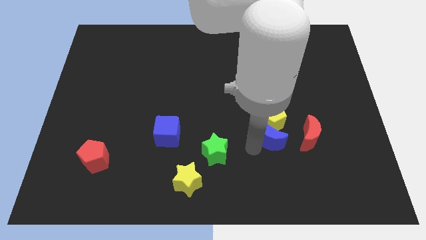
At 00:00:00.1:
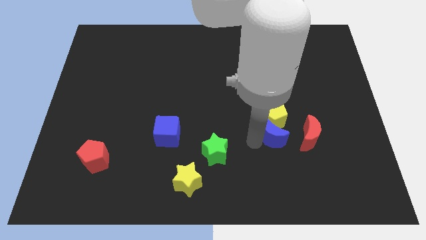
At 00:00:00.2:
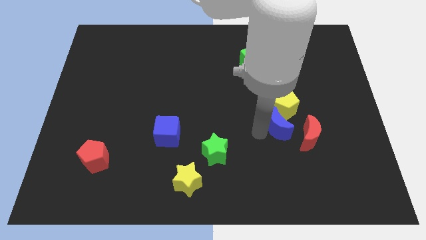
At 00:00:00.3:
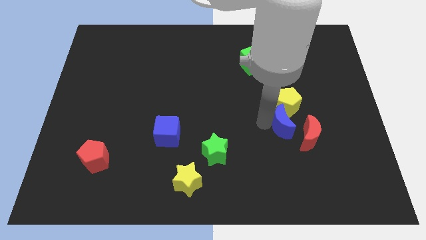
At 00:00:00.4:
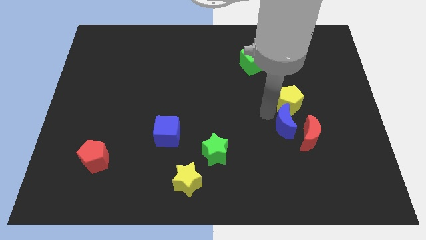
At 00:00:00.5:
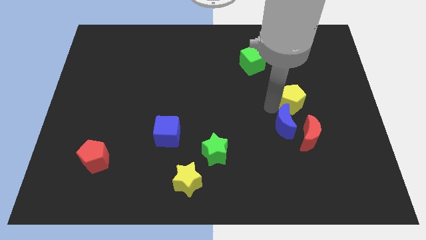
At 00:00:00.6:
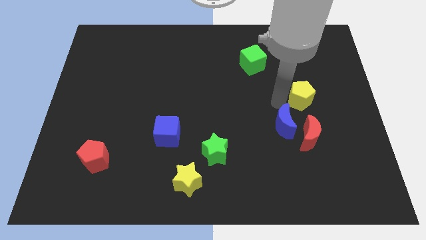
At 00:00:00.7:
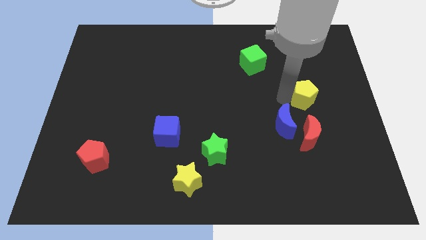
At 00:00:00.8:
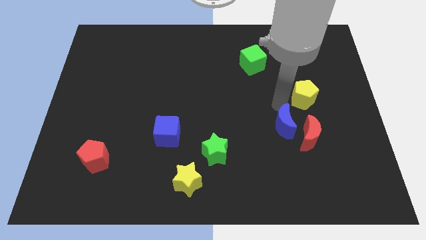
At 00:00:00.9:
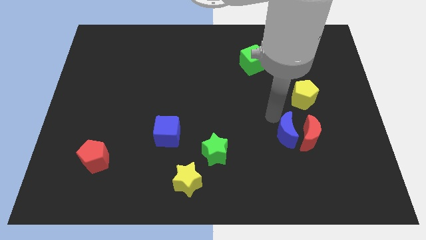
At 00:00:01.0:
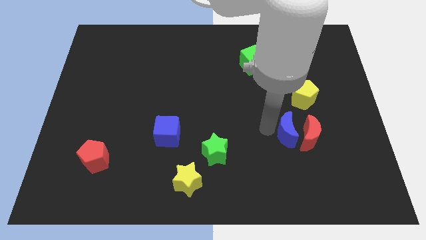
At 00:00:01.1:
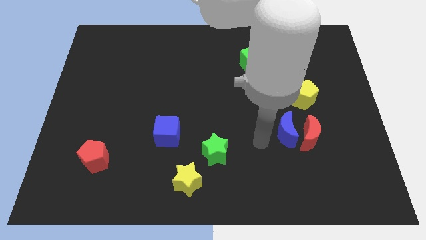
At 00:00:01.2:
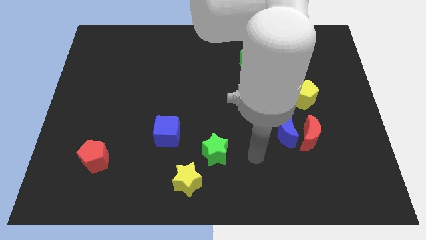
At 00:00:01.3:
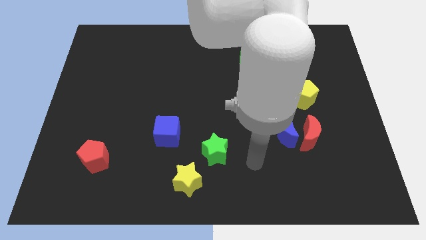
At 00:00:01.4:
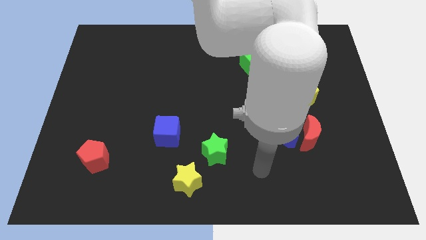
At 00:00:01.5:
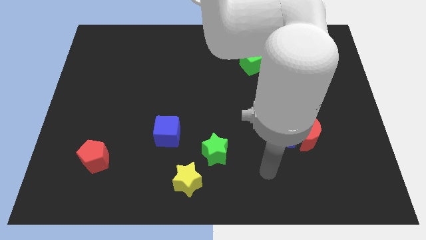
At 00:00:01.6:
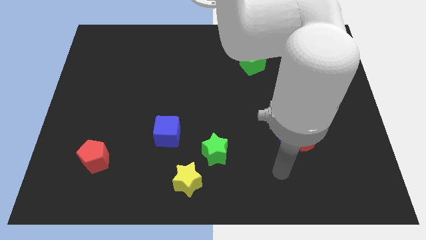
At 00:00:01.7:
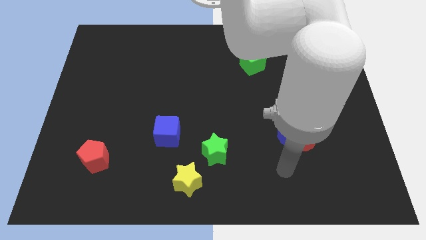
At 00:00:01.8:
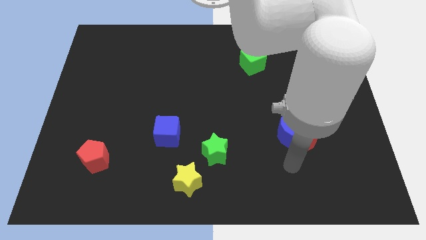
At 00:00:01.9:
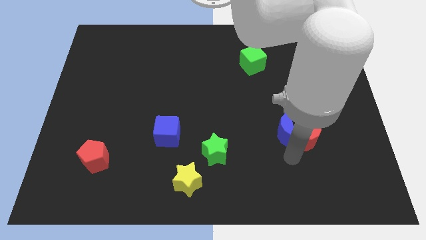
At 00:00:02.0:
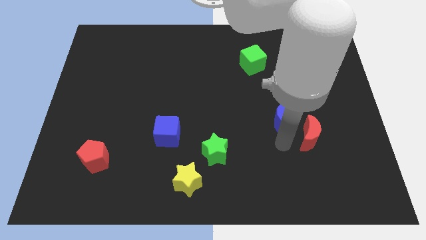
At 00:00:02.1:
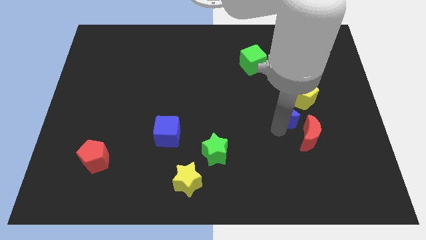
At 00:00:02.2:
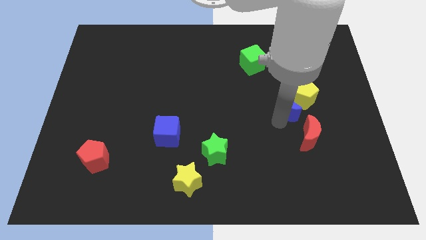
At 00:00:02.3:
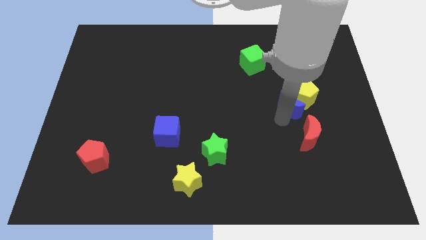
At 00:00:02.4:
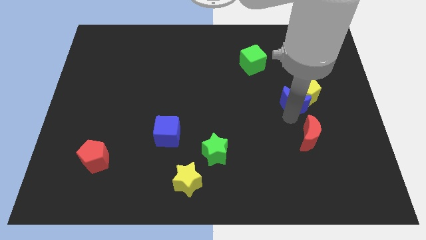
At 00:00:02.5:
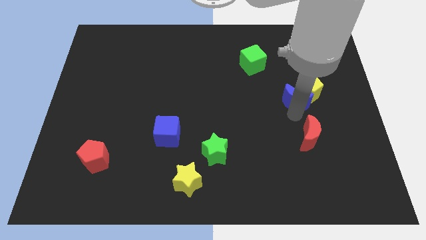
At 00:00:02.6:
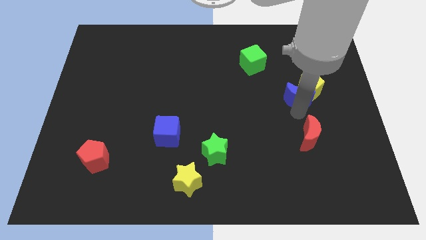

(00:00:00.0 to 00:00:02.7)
push the blue moon into the yellow pentagon towards right center

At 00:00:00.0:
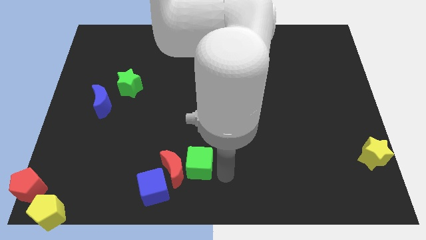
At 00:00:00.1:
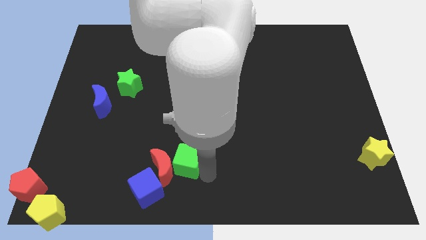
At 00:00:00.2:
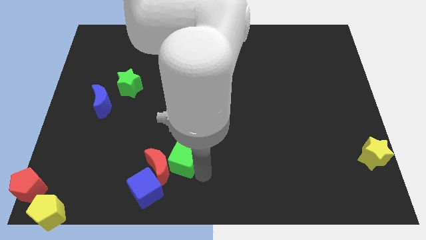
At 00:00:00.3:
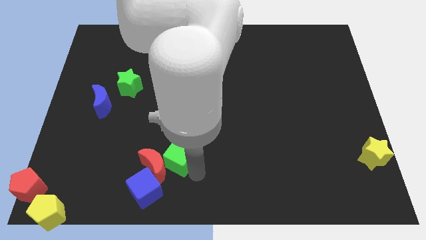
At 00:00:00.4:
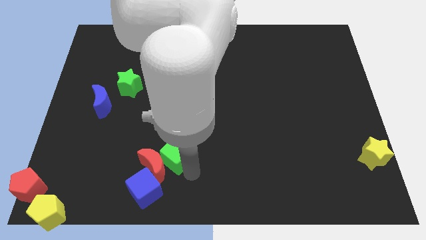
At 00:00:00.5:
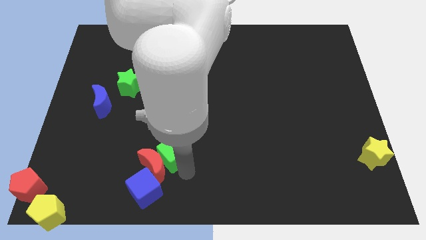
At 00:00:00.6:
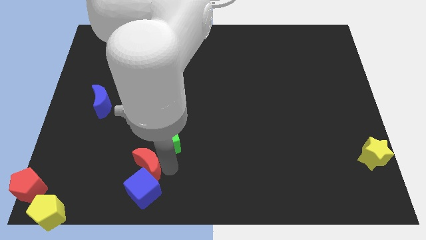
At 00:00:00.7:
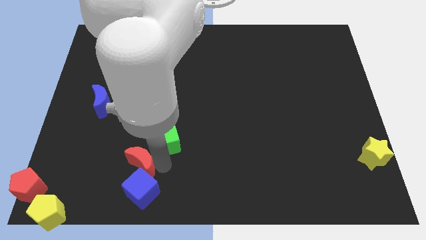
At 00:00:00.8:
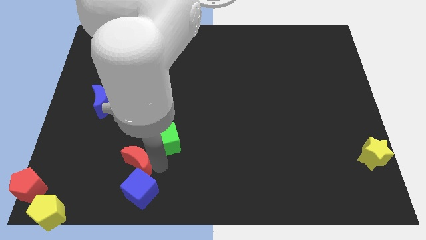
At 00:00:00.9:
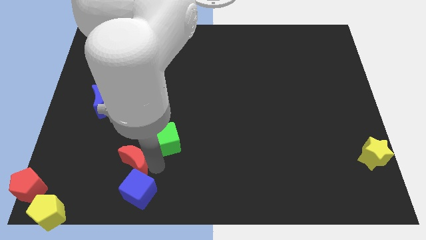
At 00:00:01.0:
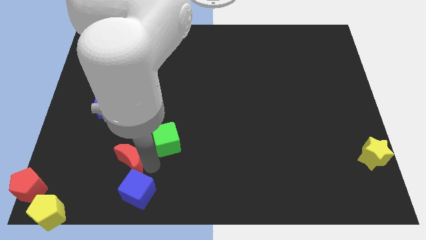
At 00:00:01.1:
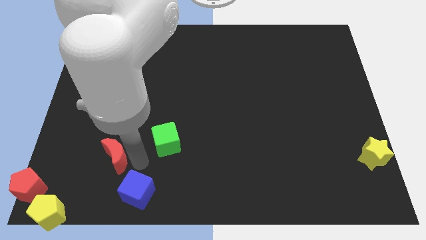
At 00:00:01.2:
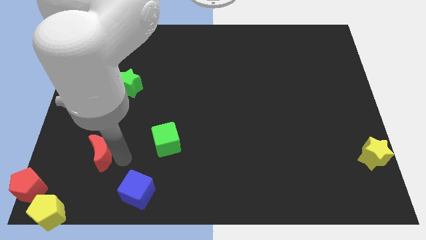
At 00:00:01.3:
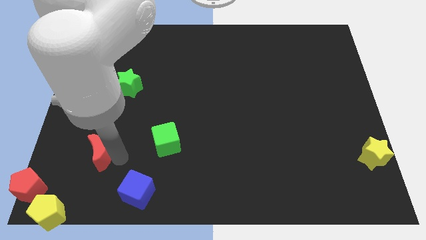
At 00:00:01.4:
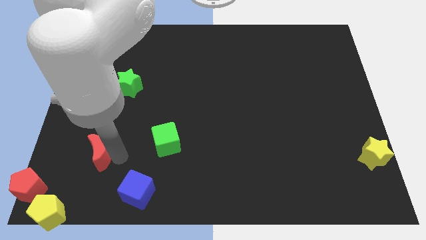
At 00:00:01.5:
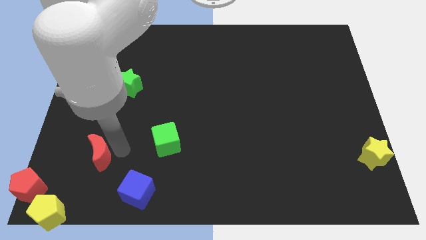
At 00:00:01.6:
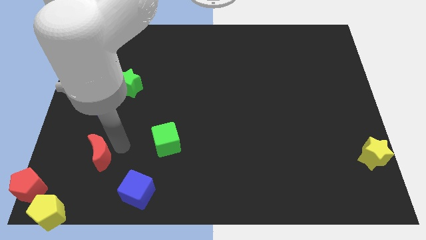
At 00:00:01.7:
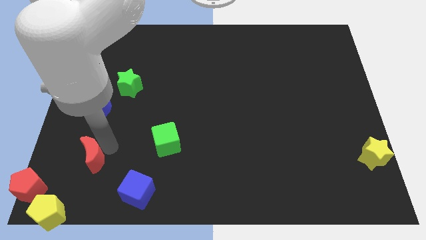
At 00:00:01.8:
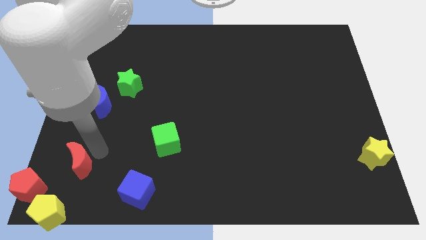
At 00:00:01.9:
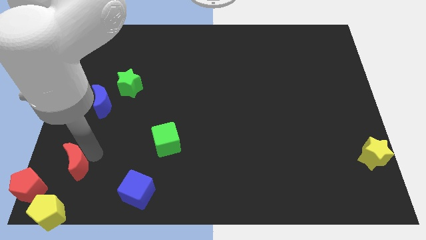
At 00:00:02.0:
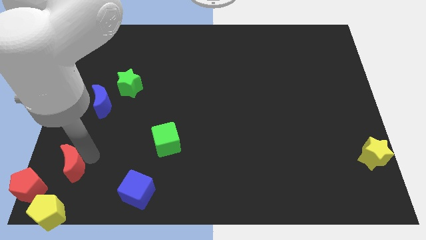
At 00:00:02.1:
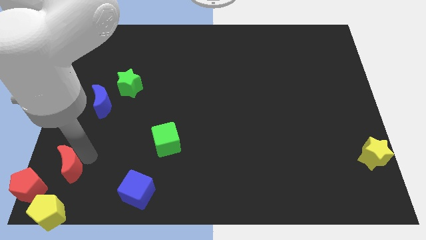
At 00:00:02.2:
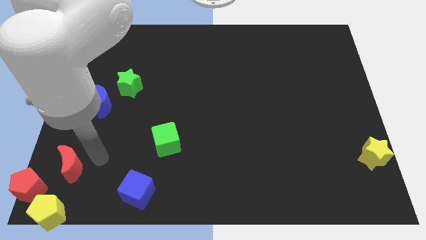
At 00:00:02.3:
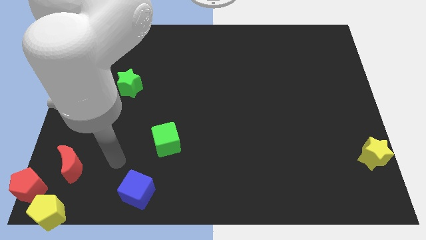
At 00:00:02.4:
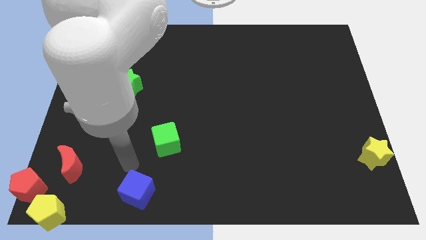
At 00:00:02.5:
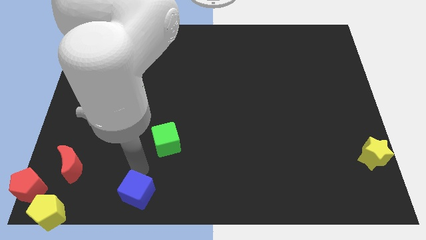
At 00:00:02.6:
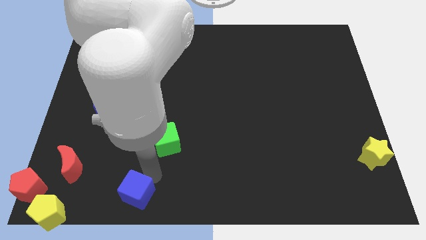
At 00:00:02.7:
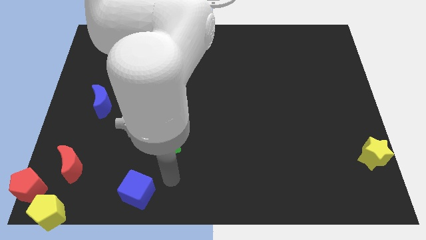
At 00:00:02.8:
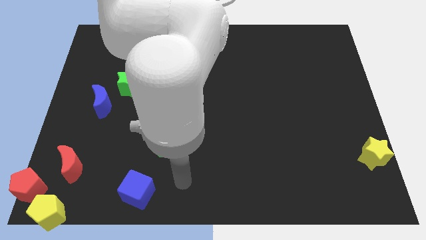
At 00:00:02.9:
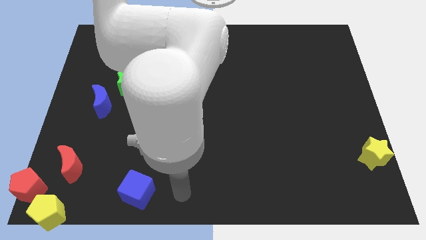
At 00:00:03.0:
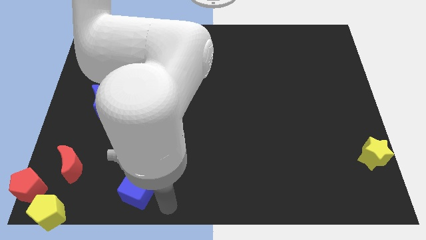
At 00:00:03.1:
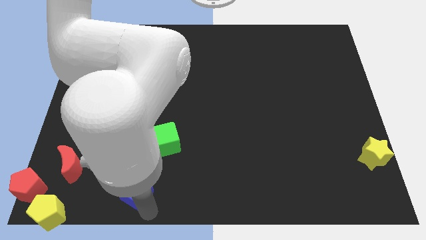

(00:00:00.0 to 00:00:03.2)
separate red moon from green and blue cubes

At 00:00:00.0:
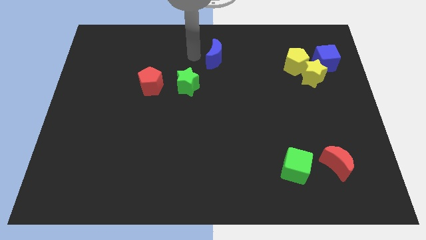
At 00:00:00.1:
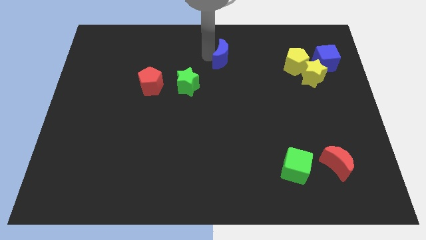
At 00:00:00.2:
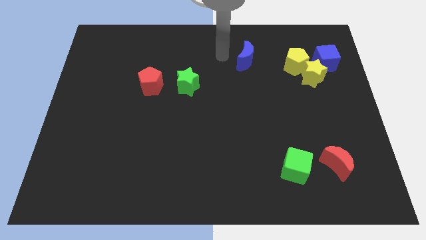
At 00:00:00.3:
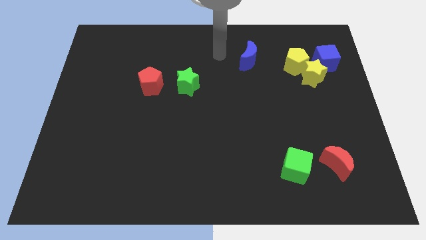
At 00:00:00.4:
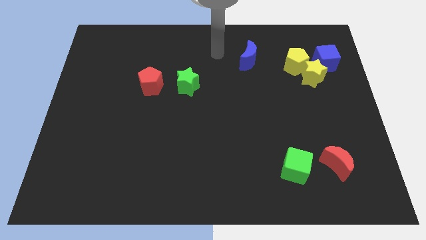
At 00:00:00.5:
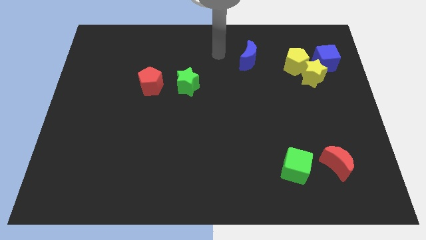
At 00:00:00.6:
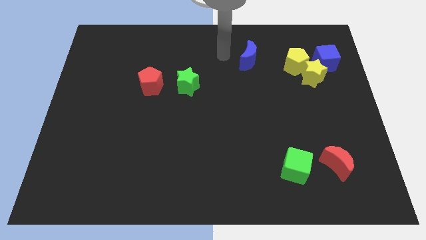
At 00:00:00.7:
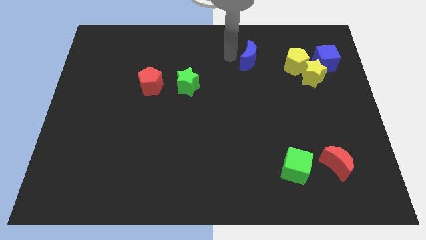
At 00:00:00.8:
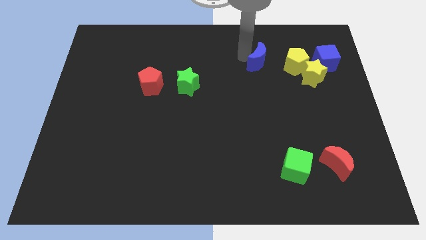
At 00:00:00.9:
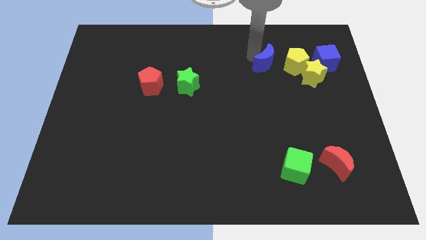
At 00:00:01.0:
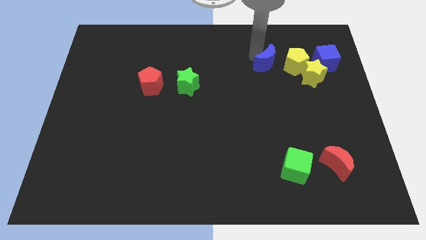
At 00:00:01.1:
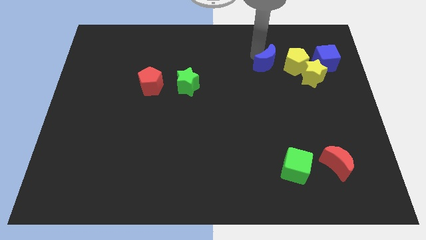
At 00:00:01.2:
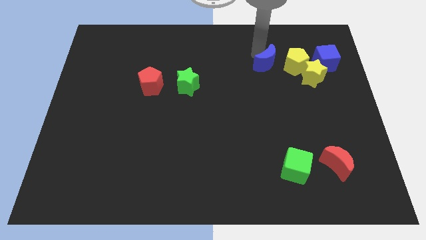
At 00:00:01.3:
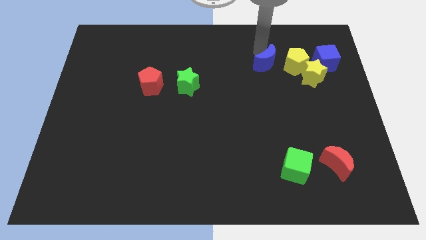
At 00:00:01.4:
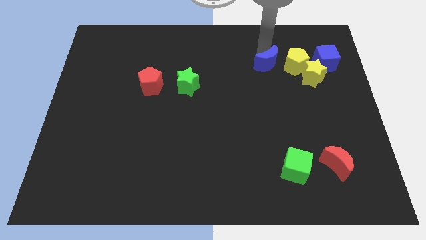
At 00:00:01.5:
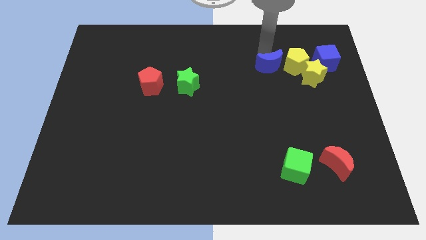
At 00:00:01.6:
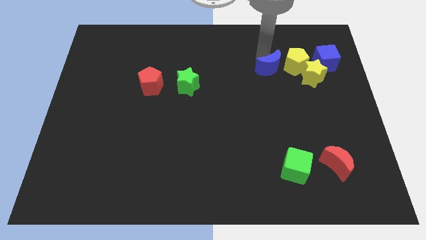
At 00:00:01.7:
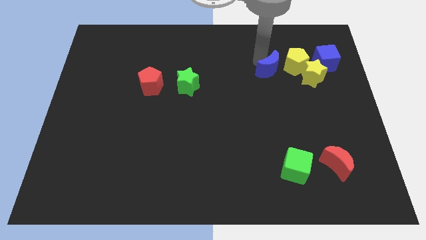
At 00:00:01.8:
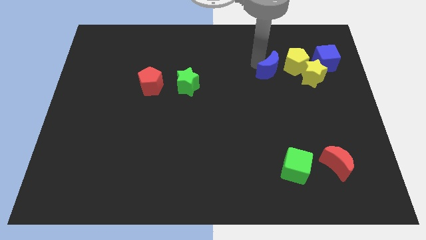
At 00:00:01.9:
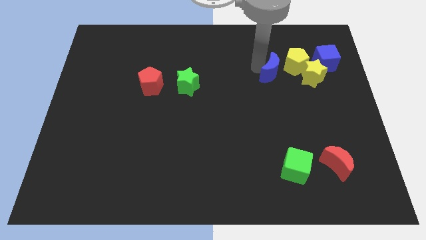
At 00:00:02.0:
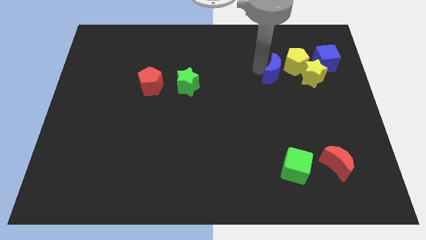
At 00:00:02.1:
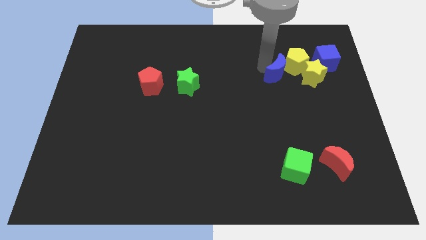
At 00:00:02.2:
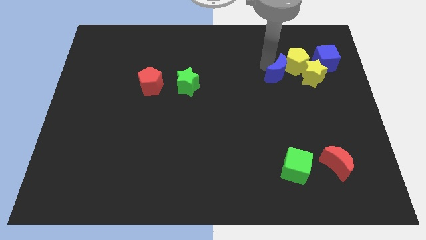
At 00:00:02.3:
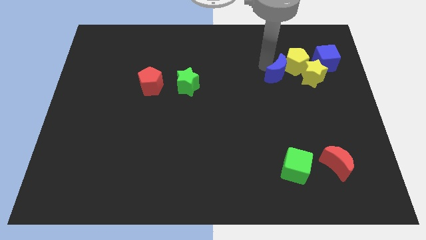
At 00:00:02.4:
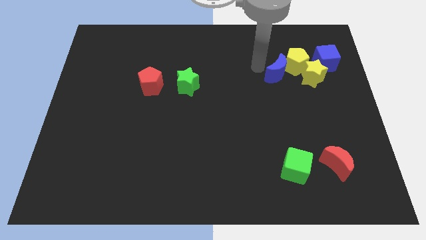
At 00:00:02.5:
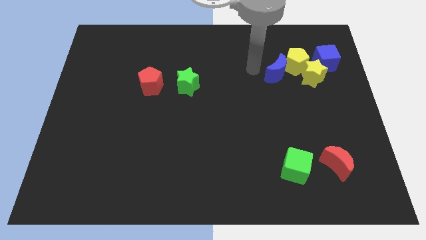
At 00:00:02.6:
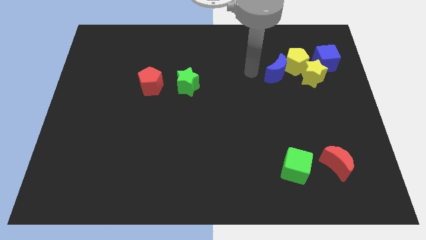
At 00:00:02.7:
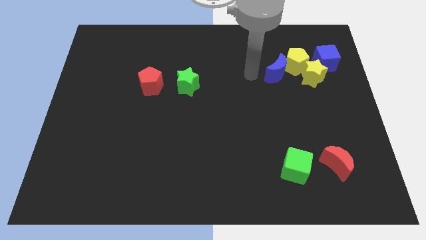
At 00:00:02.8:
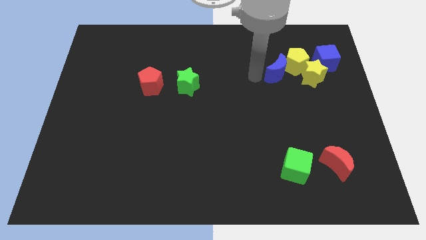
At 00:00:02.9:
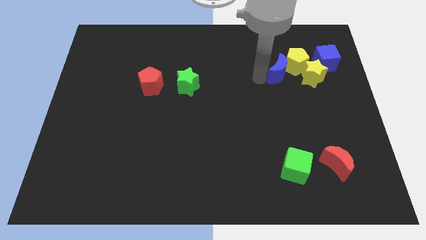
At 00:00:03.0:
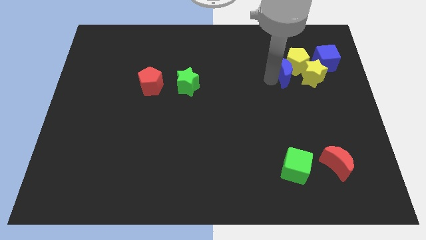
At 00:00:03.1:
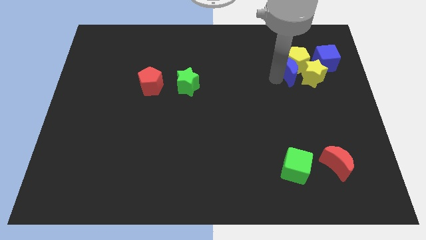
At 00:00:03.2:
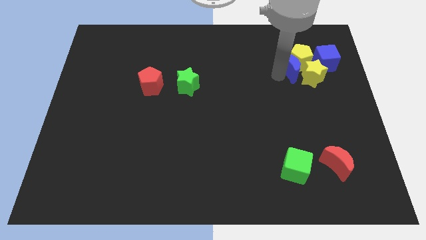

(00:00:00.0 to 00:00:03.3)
push the blue crescent close to the yellow pentagon
